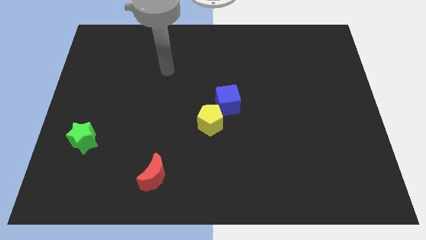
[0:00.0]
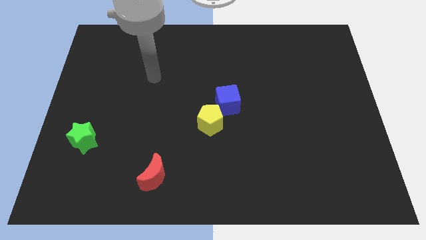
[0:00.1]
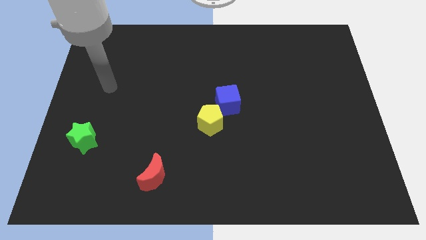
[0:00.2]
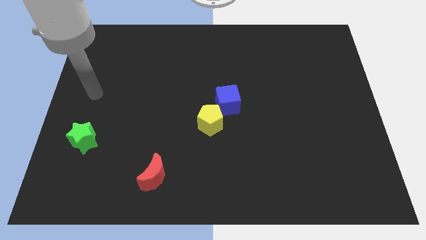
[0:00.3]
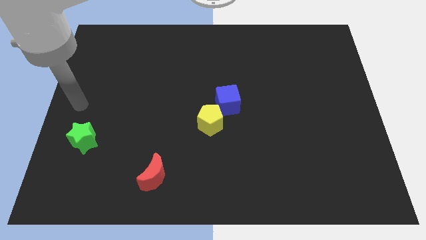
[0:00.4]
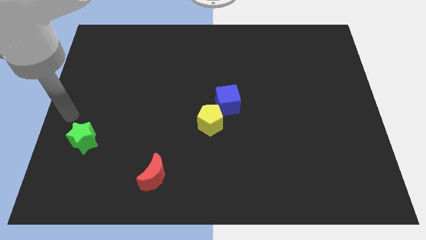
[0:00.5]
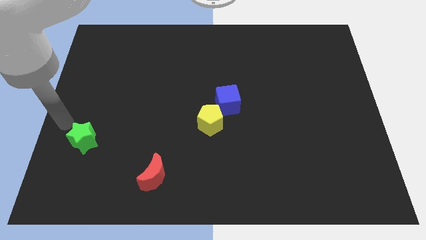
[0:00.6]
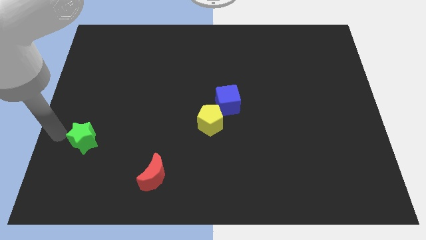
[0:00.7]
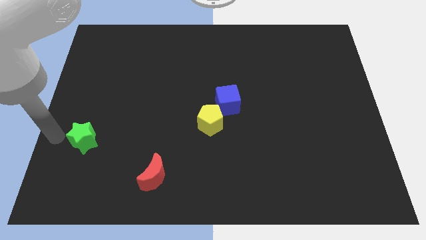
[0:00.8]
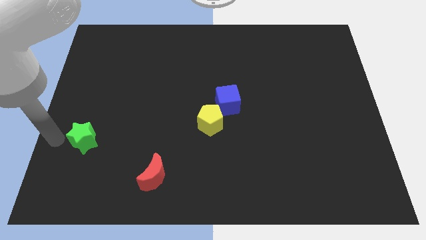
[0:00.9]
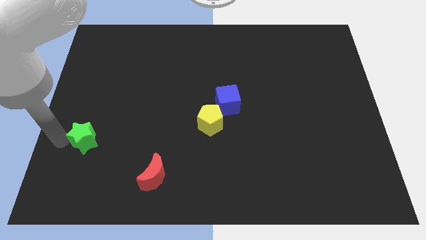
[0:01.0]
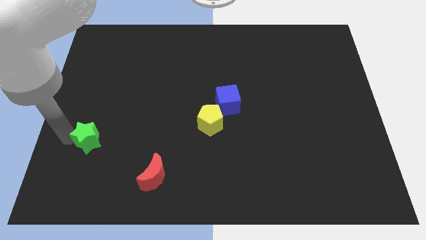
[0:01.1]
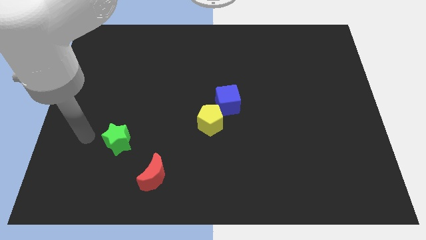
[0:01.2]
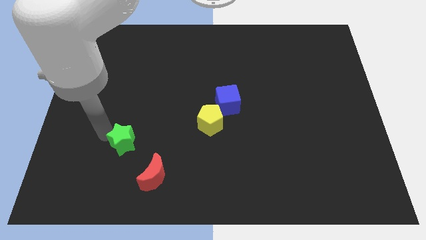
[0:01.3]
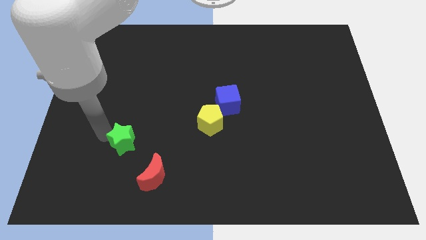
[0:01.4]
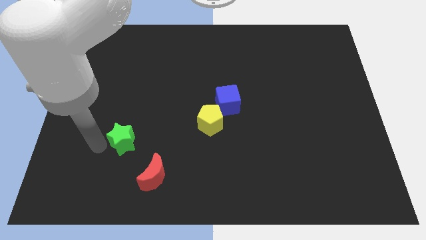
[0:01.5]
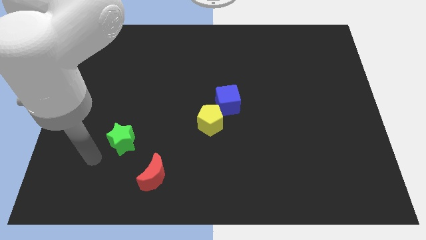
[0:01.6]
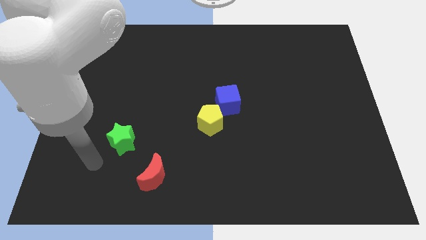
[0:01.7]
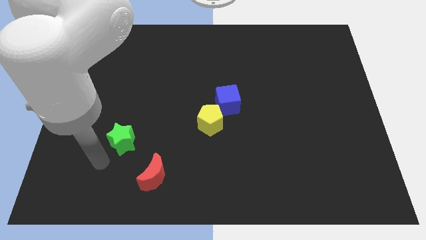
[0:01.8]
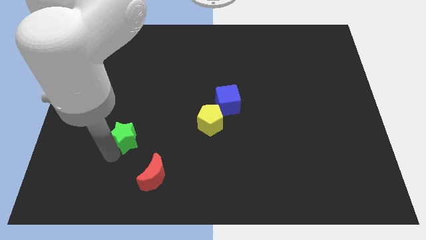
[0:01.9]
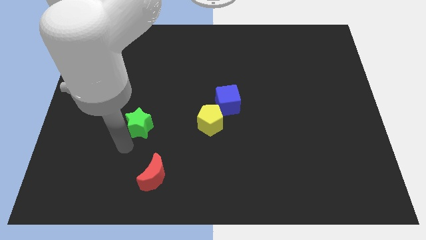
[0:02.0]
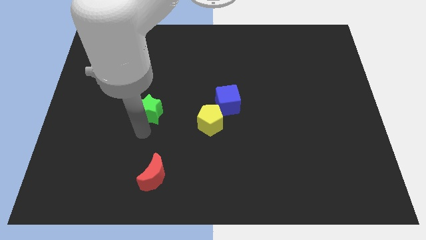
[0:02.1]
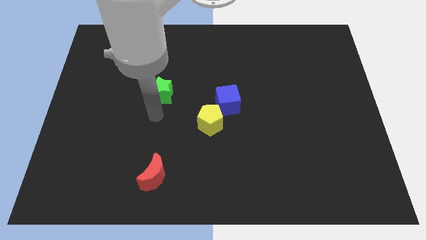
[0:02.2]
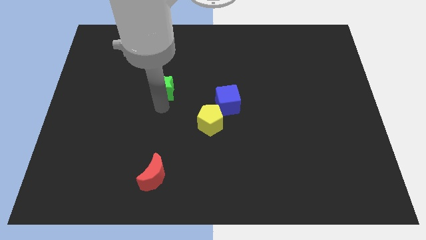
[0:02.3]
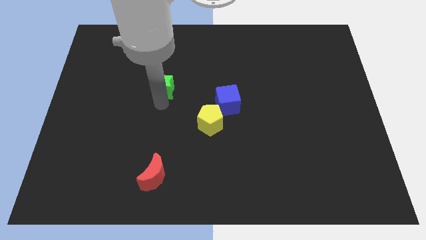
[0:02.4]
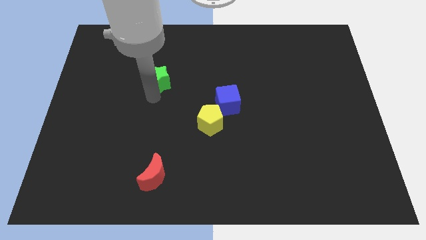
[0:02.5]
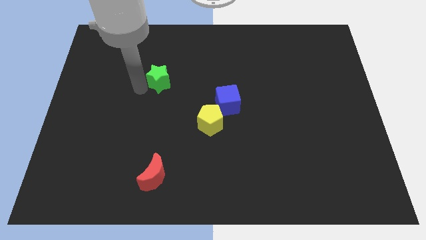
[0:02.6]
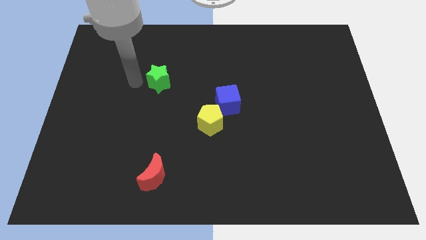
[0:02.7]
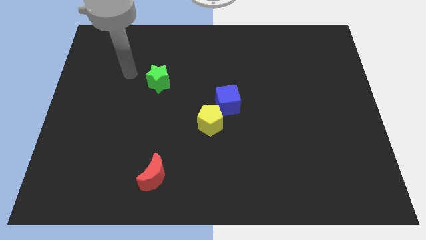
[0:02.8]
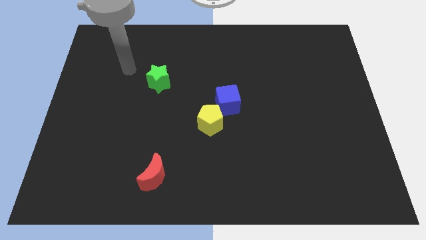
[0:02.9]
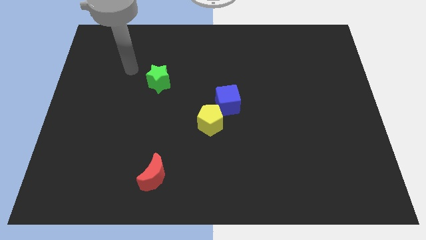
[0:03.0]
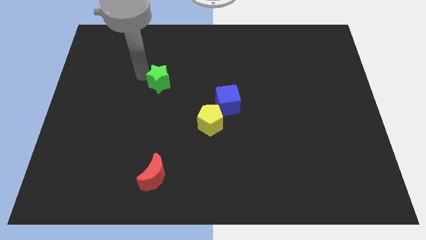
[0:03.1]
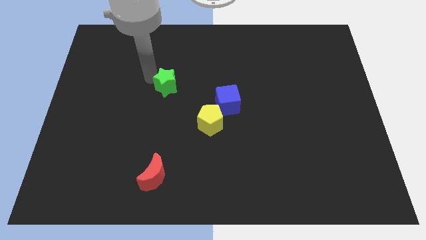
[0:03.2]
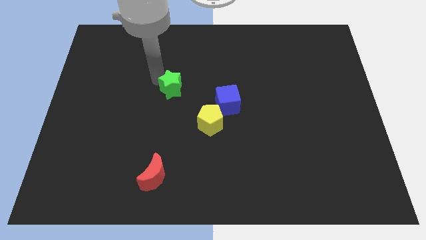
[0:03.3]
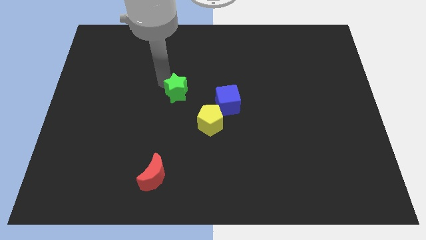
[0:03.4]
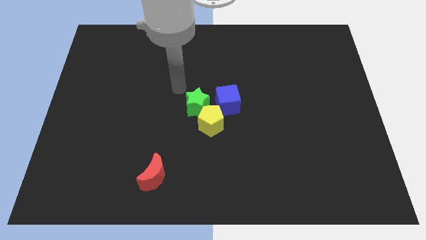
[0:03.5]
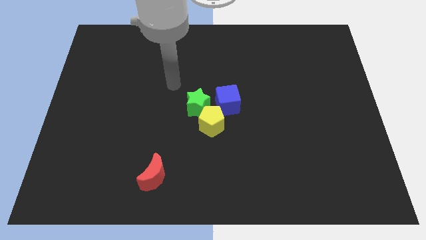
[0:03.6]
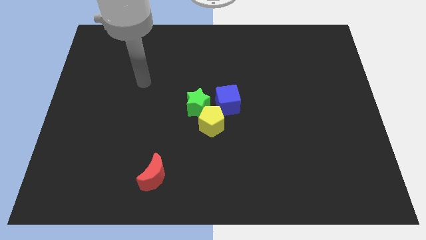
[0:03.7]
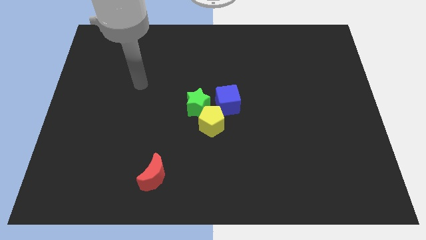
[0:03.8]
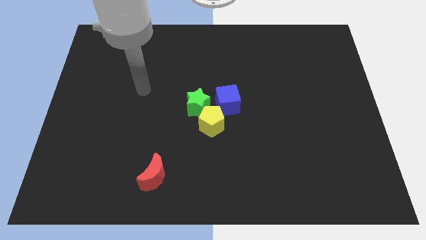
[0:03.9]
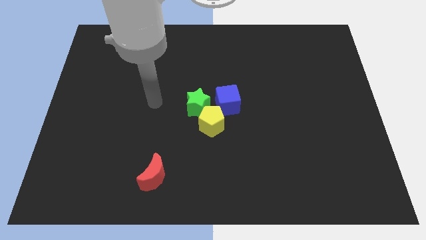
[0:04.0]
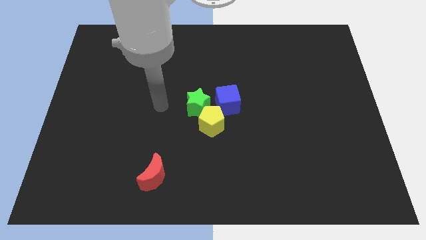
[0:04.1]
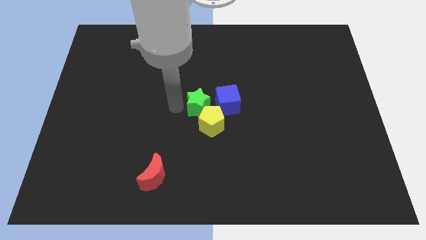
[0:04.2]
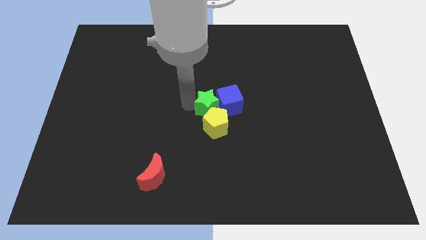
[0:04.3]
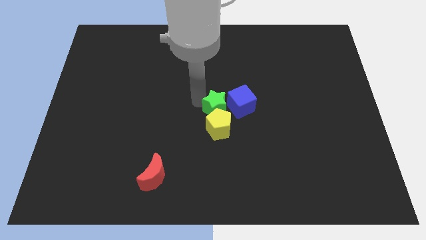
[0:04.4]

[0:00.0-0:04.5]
put the green block close to the cube

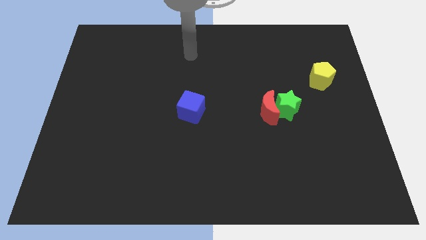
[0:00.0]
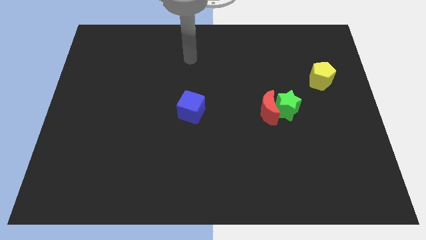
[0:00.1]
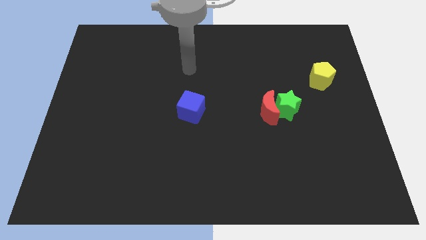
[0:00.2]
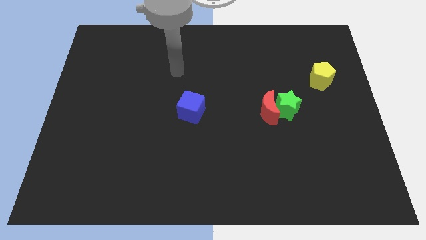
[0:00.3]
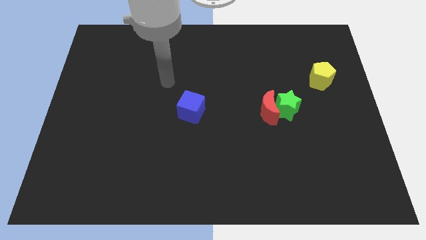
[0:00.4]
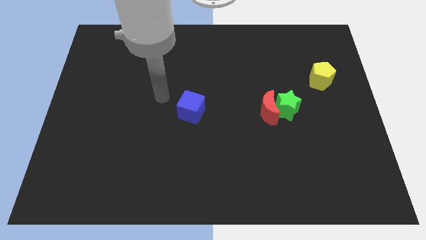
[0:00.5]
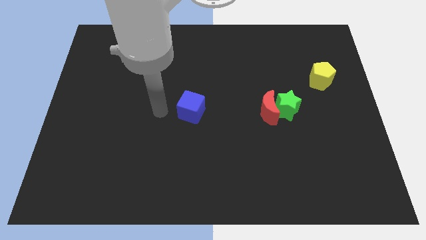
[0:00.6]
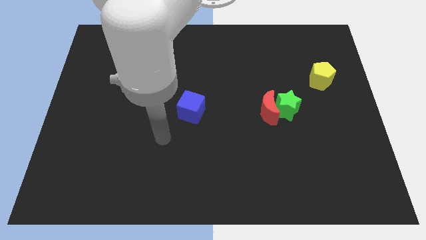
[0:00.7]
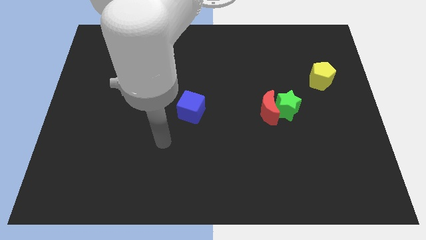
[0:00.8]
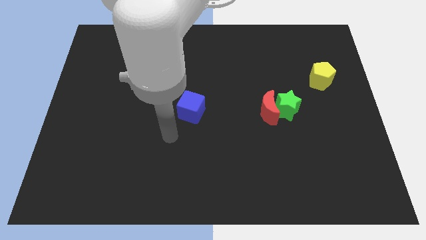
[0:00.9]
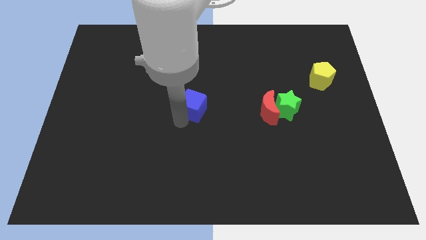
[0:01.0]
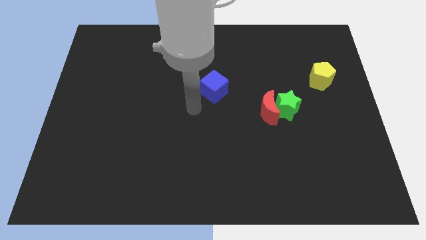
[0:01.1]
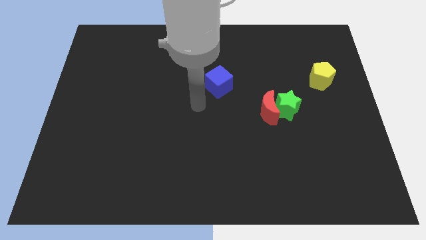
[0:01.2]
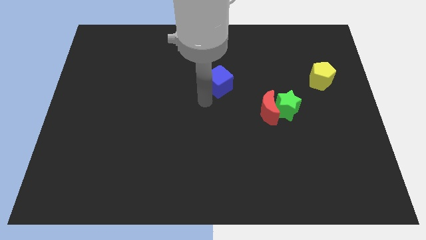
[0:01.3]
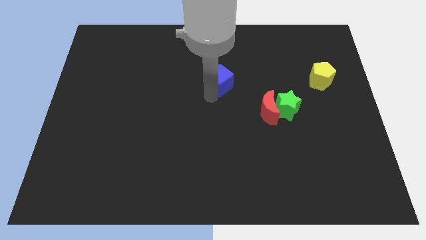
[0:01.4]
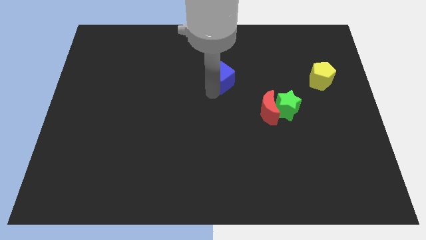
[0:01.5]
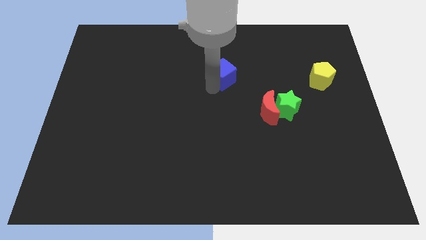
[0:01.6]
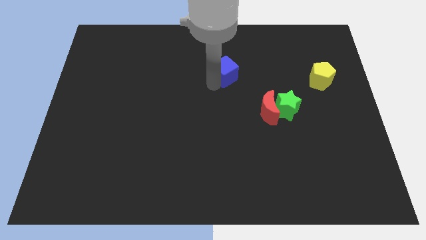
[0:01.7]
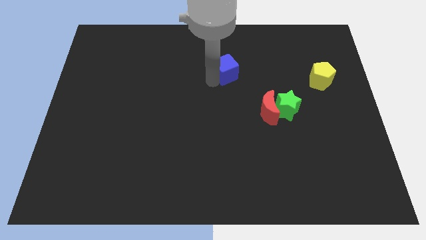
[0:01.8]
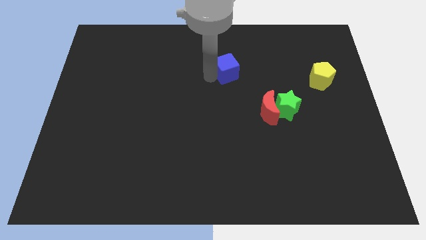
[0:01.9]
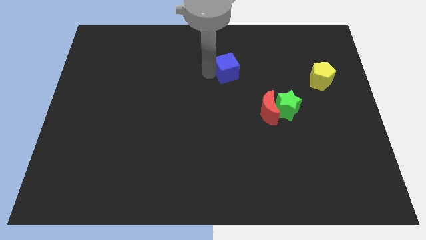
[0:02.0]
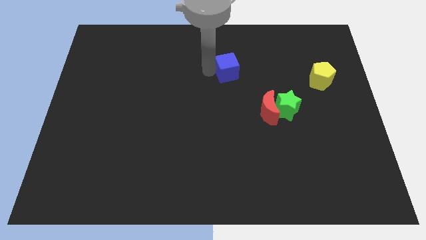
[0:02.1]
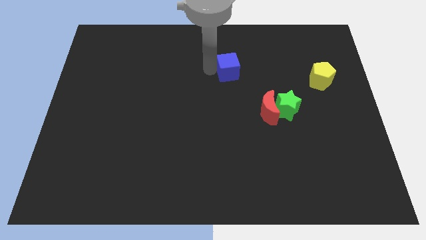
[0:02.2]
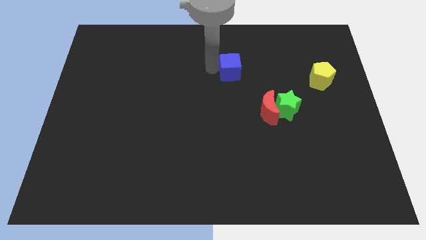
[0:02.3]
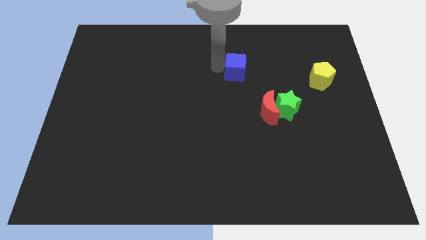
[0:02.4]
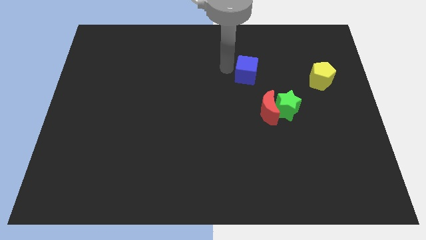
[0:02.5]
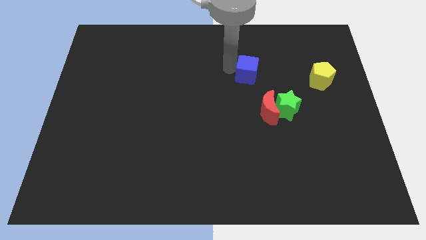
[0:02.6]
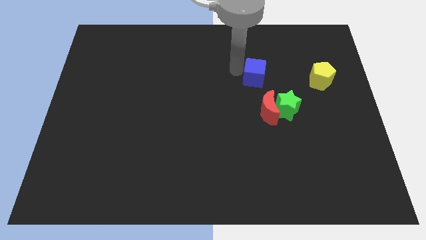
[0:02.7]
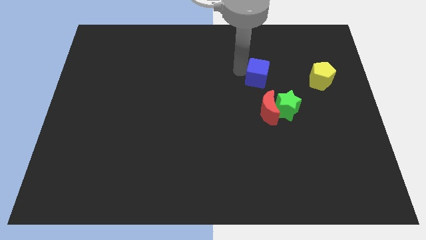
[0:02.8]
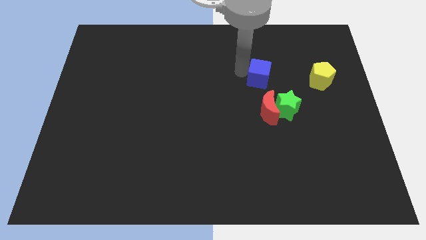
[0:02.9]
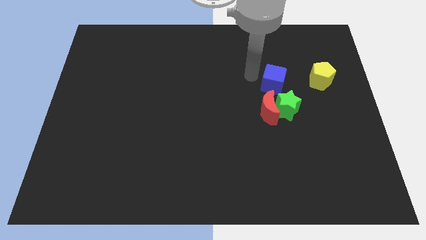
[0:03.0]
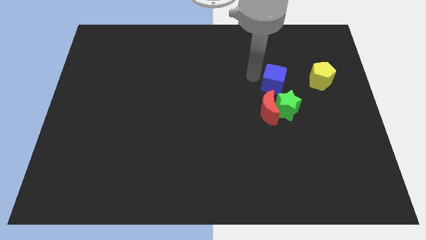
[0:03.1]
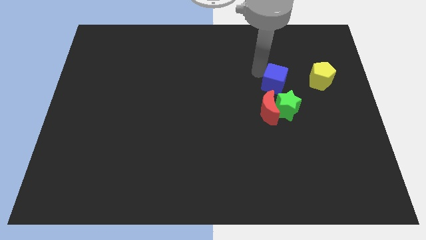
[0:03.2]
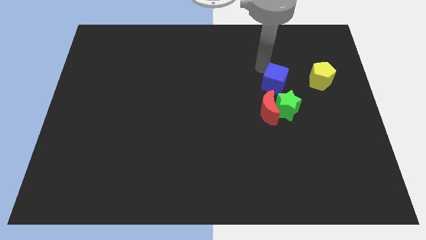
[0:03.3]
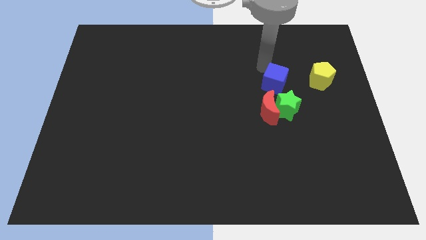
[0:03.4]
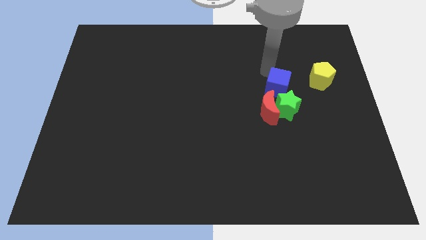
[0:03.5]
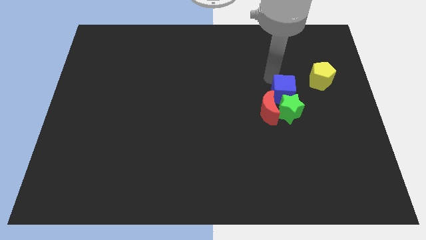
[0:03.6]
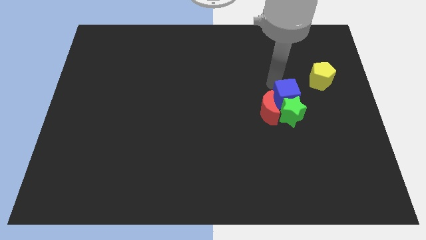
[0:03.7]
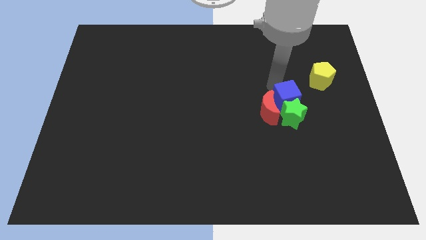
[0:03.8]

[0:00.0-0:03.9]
move the blue cube towards the green star
